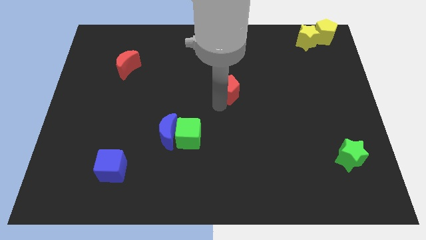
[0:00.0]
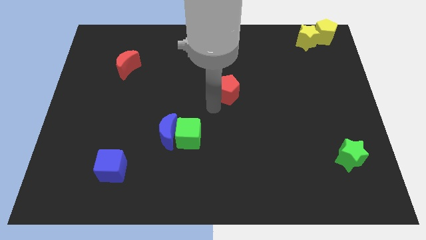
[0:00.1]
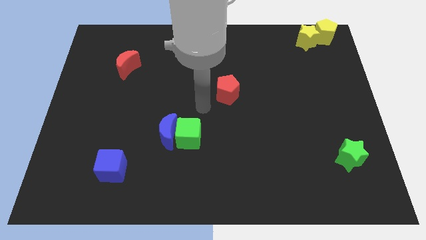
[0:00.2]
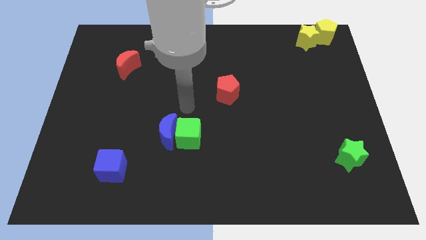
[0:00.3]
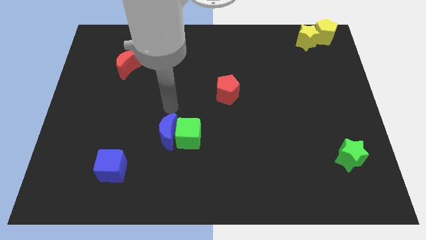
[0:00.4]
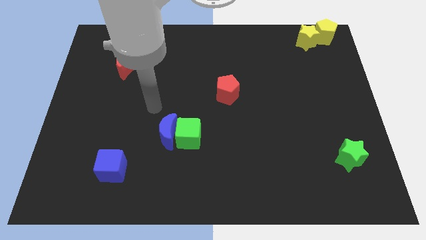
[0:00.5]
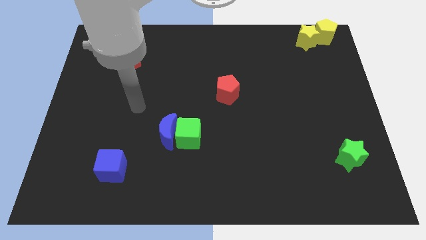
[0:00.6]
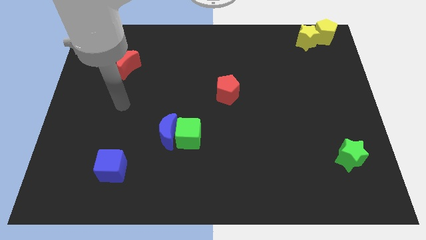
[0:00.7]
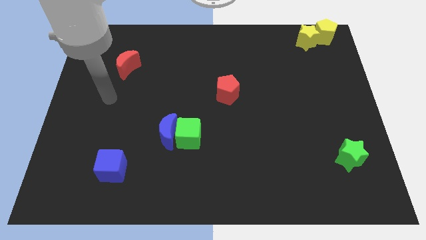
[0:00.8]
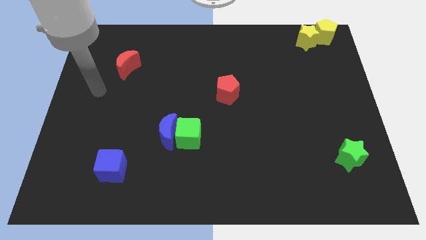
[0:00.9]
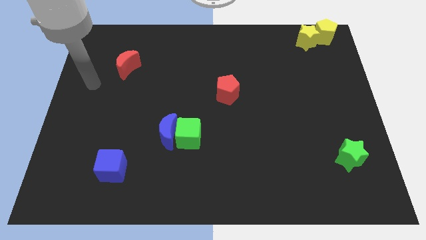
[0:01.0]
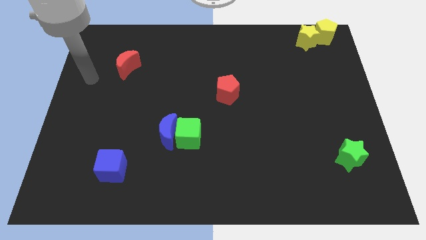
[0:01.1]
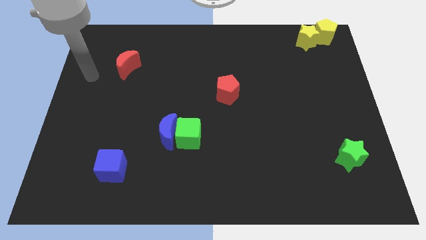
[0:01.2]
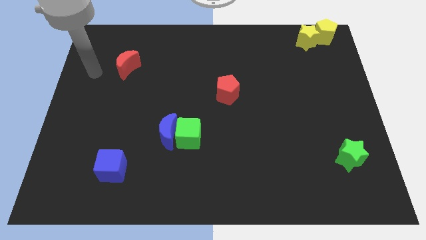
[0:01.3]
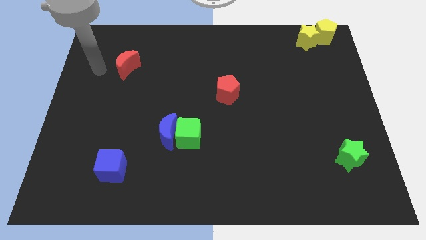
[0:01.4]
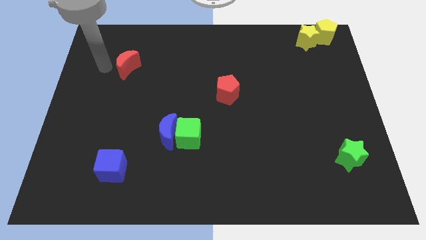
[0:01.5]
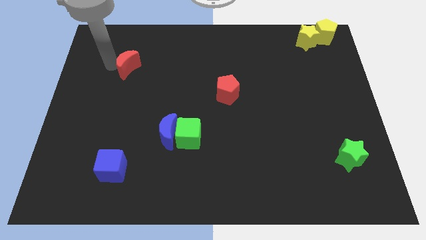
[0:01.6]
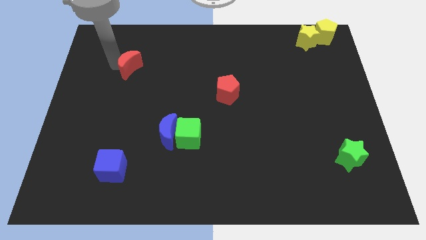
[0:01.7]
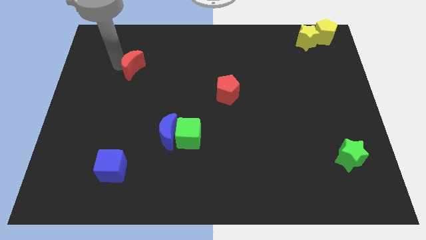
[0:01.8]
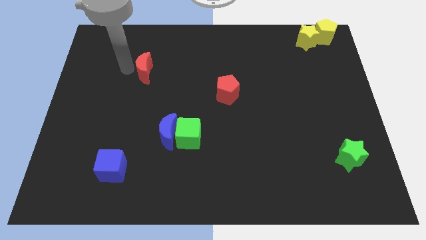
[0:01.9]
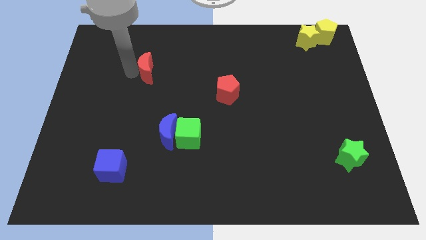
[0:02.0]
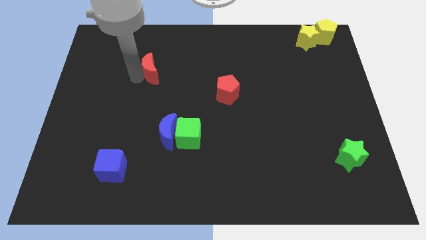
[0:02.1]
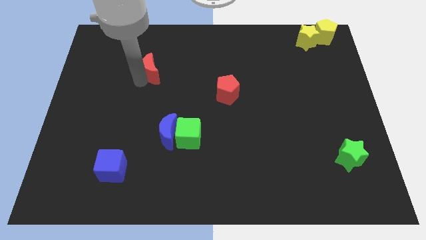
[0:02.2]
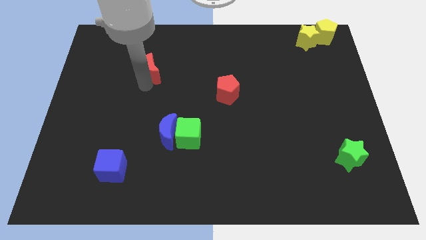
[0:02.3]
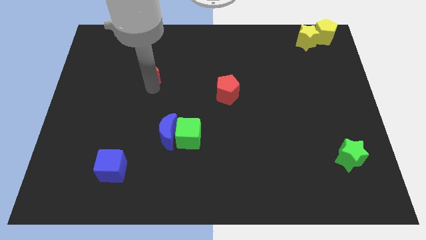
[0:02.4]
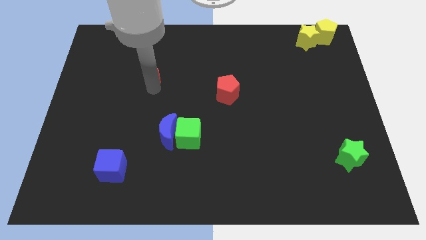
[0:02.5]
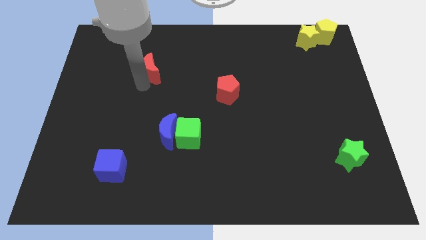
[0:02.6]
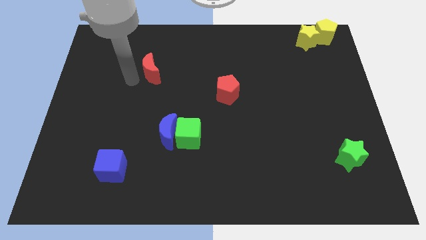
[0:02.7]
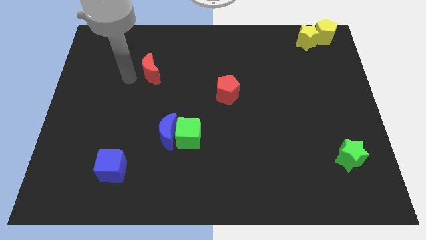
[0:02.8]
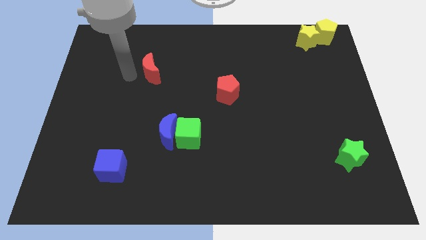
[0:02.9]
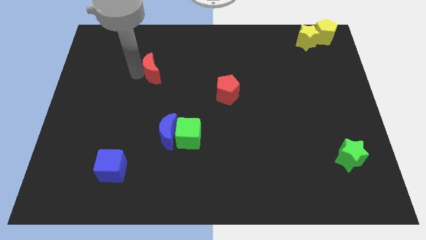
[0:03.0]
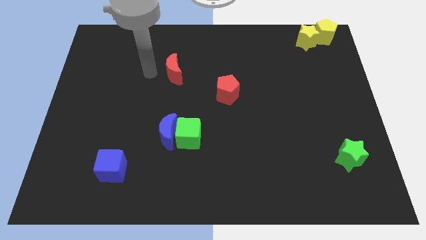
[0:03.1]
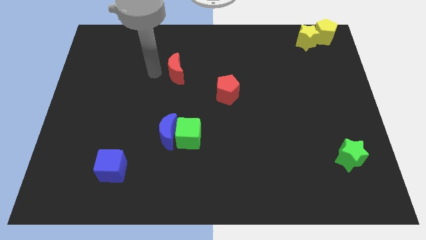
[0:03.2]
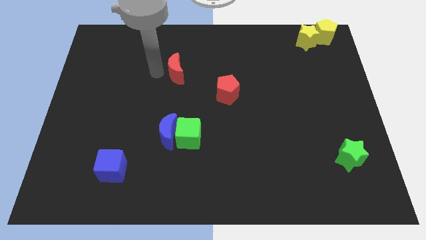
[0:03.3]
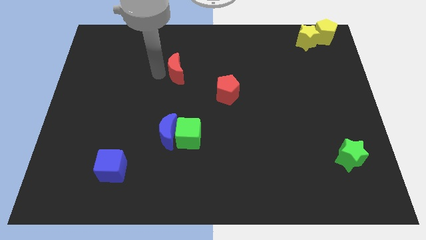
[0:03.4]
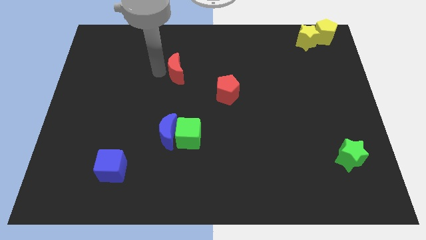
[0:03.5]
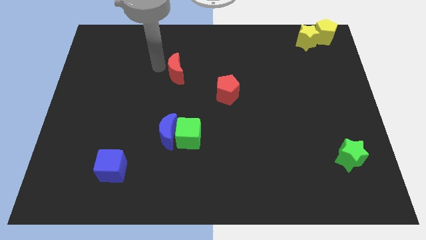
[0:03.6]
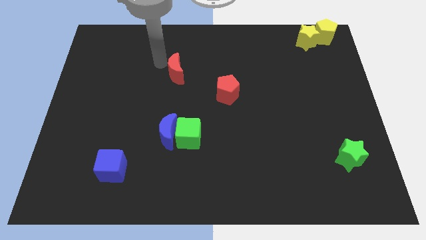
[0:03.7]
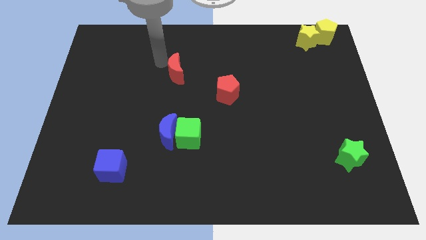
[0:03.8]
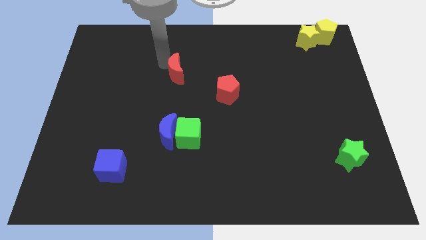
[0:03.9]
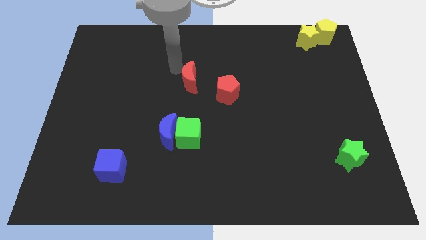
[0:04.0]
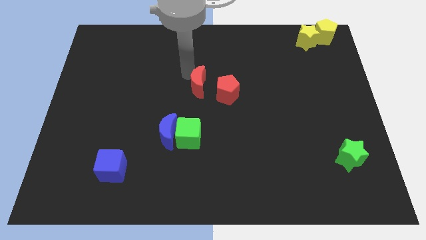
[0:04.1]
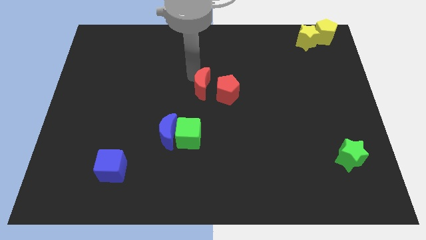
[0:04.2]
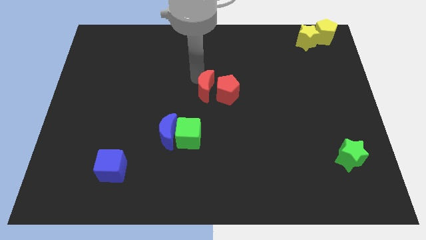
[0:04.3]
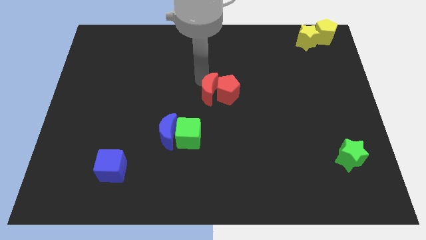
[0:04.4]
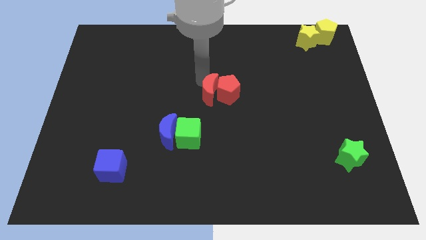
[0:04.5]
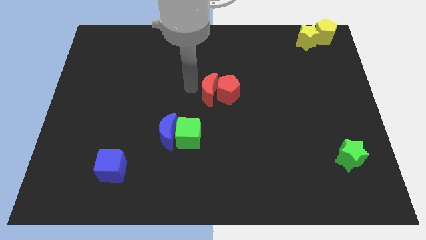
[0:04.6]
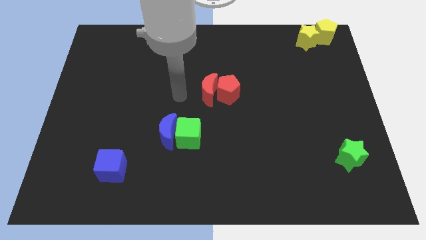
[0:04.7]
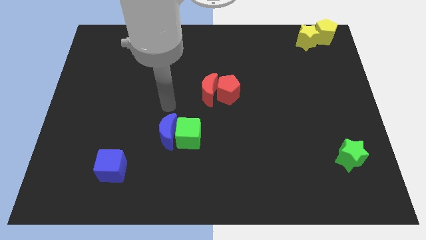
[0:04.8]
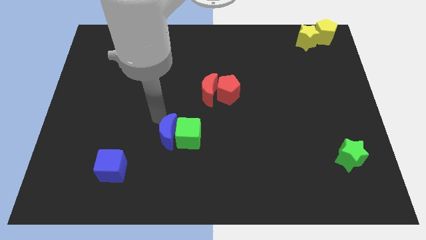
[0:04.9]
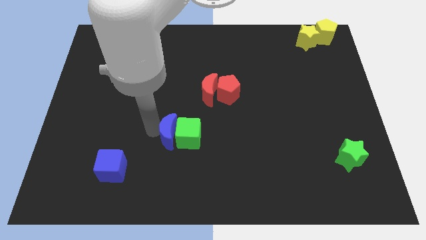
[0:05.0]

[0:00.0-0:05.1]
push the red crescent into the red pentagon

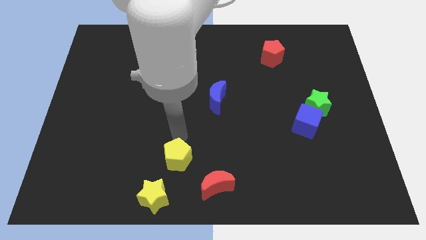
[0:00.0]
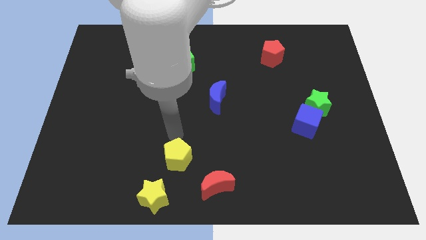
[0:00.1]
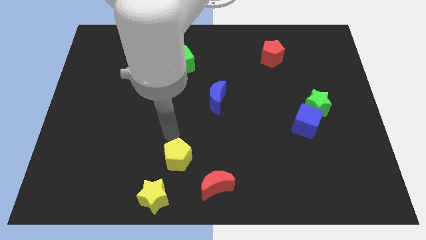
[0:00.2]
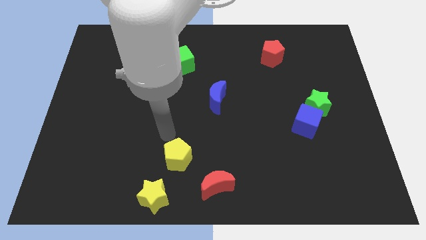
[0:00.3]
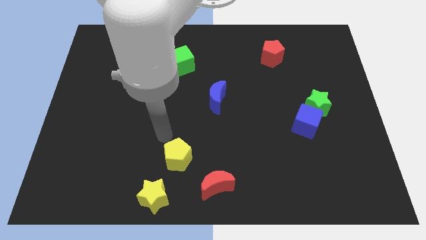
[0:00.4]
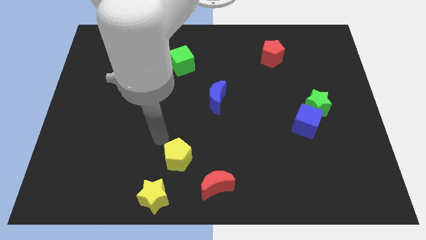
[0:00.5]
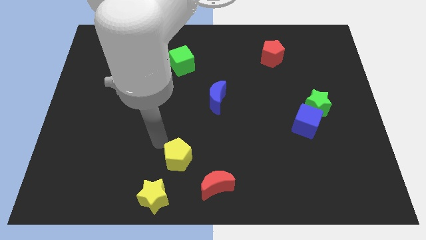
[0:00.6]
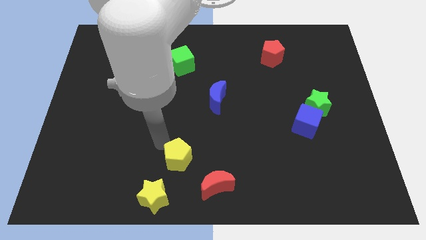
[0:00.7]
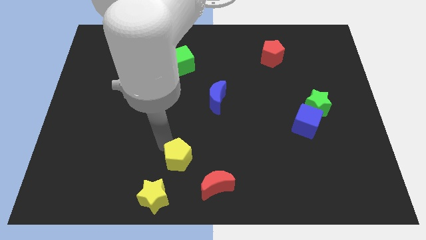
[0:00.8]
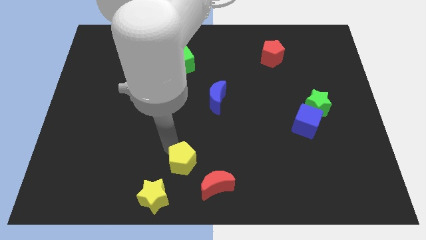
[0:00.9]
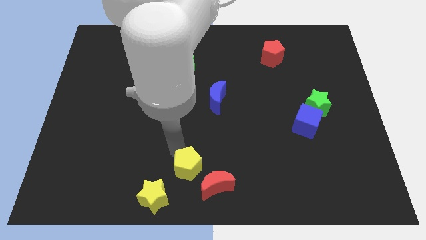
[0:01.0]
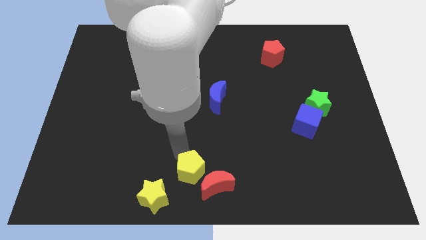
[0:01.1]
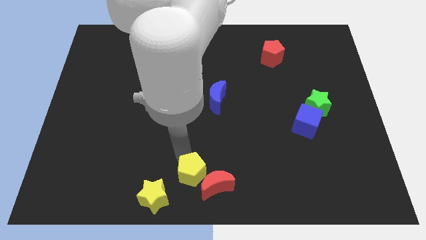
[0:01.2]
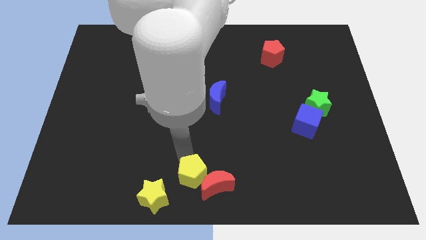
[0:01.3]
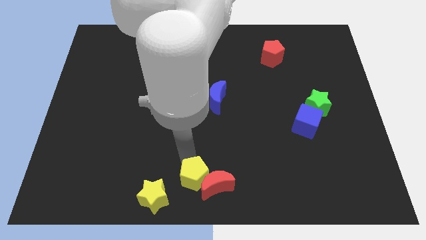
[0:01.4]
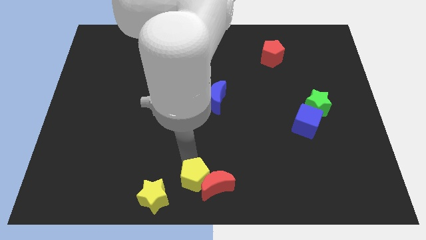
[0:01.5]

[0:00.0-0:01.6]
move the yellow pentagon to the left above the red moon

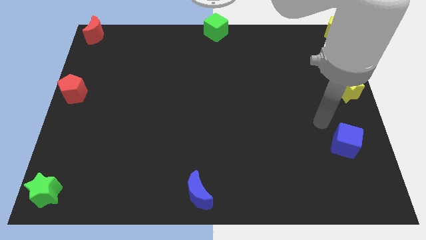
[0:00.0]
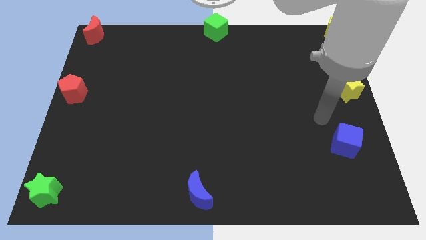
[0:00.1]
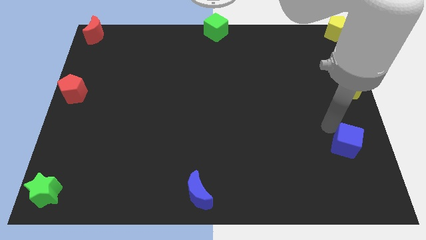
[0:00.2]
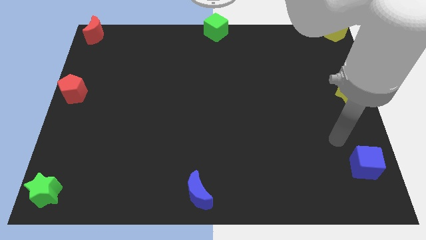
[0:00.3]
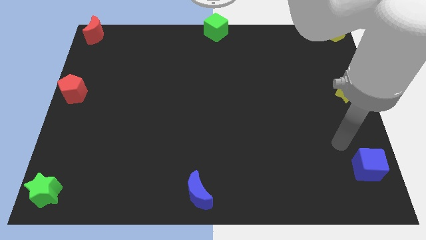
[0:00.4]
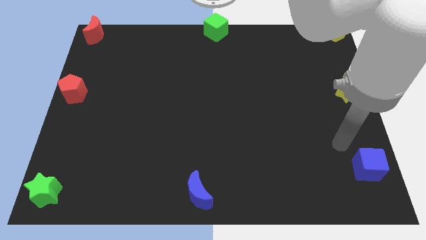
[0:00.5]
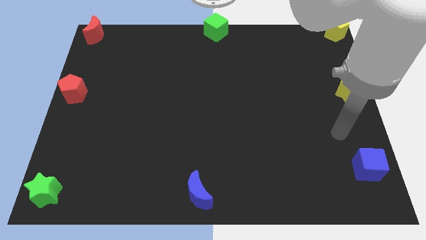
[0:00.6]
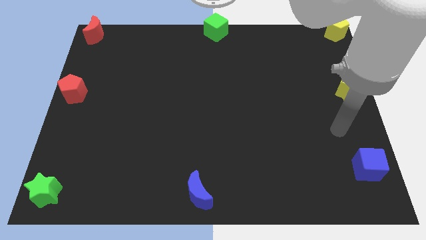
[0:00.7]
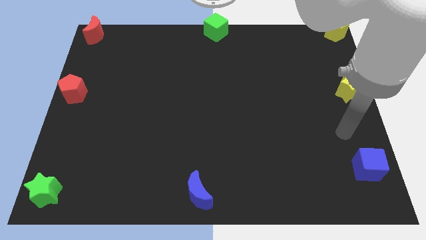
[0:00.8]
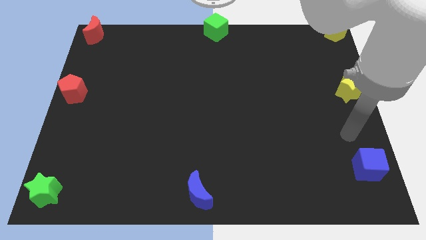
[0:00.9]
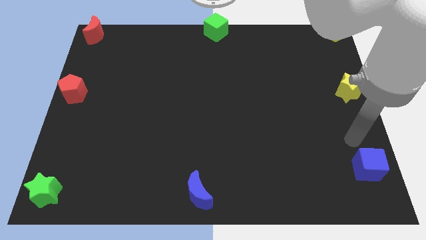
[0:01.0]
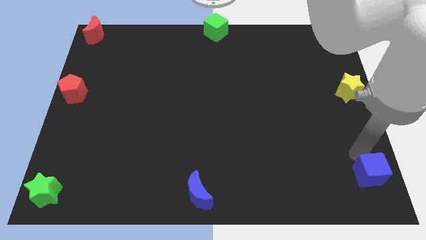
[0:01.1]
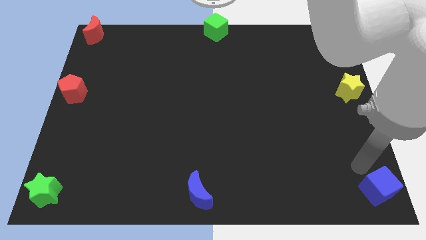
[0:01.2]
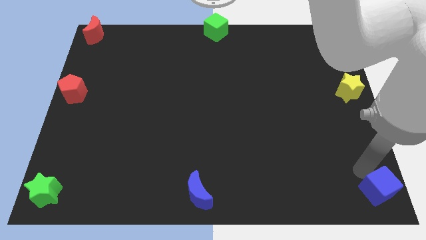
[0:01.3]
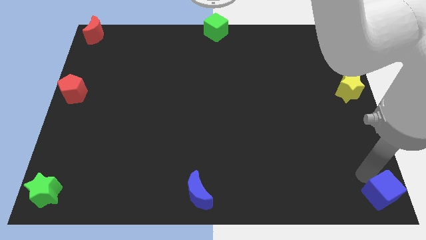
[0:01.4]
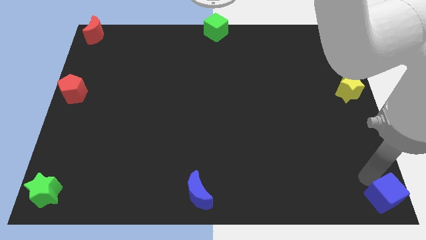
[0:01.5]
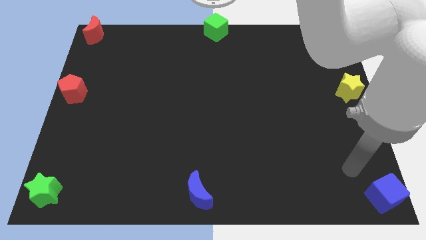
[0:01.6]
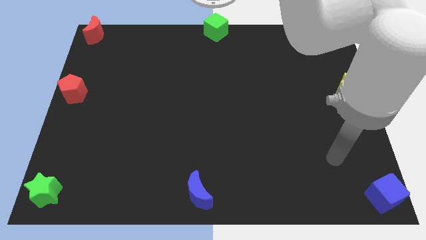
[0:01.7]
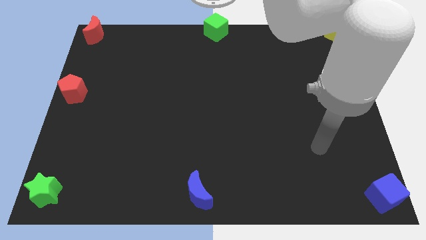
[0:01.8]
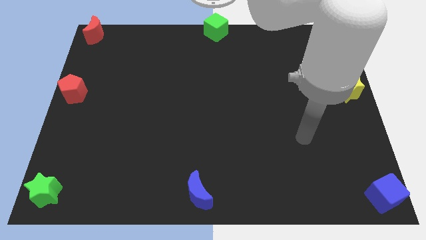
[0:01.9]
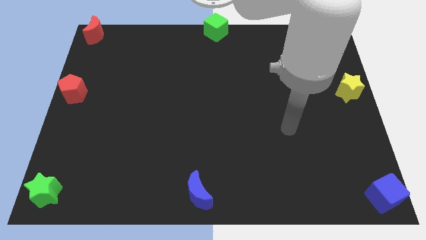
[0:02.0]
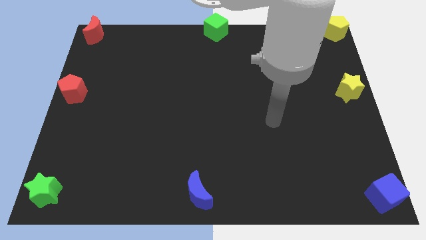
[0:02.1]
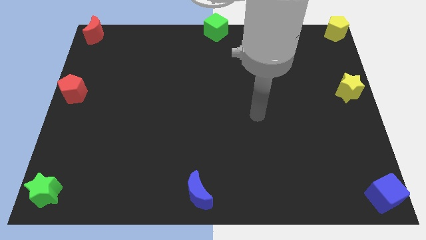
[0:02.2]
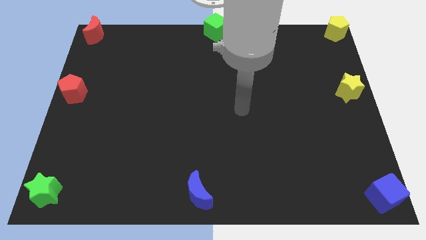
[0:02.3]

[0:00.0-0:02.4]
push the blue cube to the bottom right corner of the board
